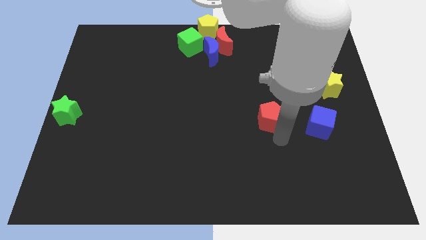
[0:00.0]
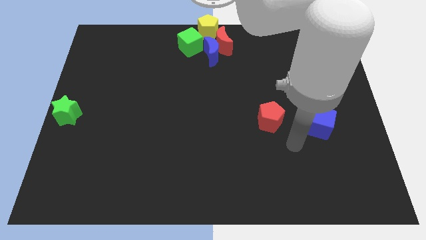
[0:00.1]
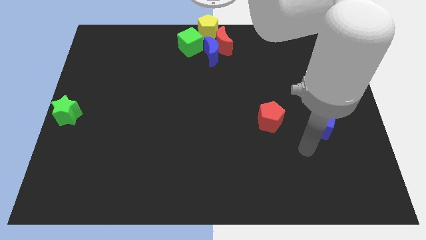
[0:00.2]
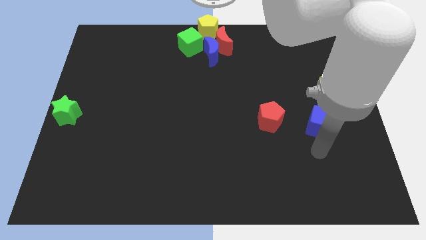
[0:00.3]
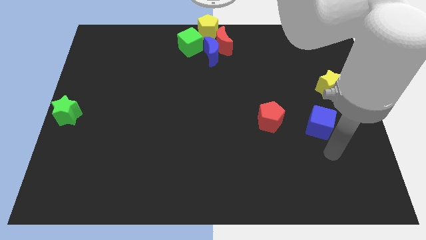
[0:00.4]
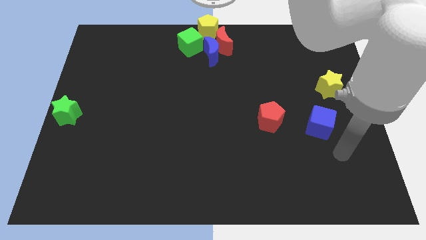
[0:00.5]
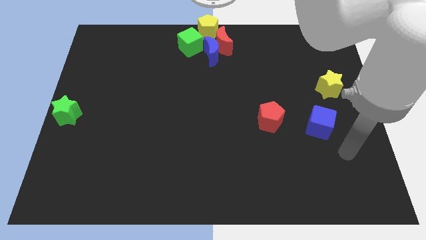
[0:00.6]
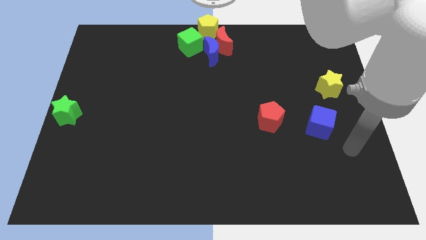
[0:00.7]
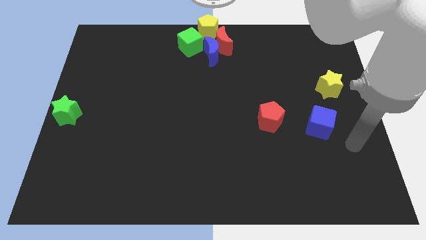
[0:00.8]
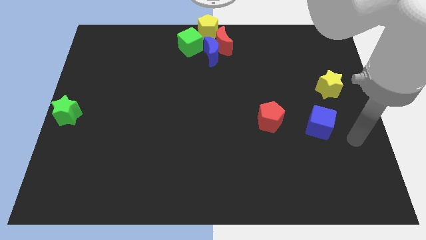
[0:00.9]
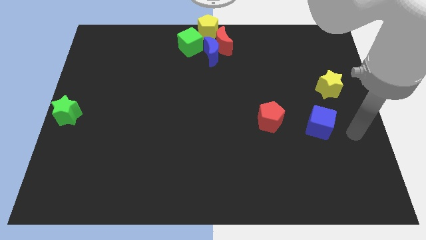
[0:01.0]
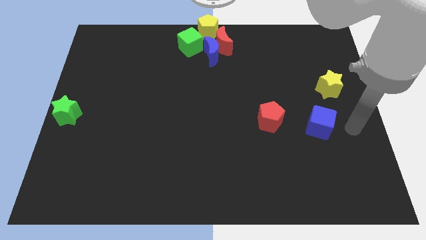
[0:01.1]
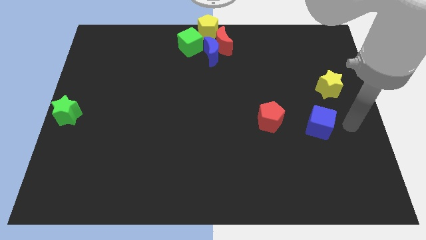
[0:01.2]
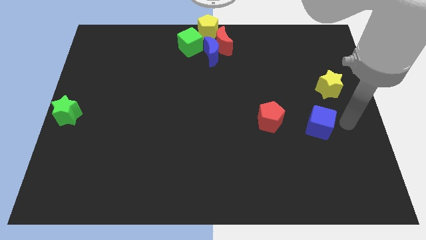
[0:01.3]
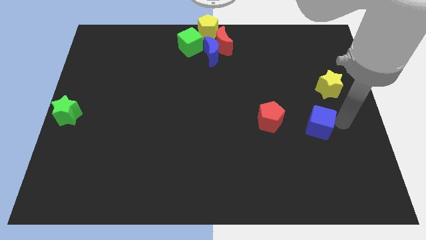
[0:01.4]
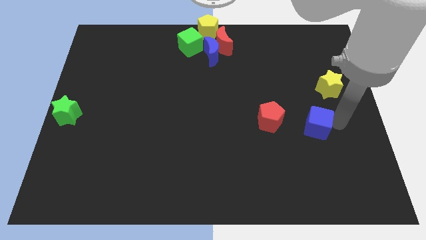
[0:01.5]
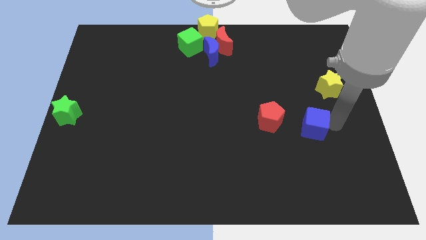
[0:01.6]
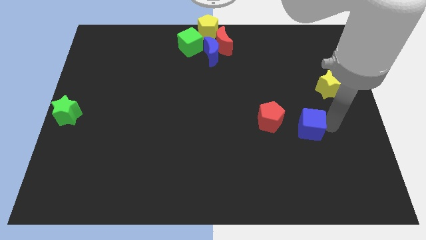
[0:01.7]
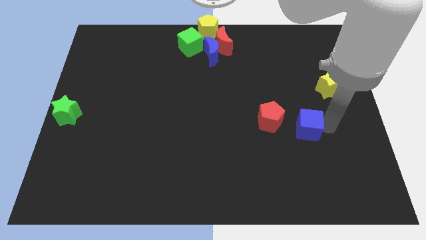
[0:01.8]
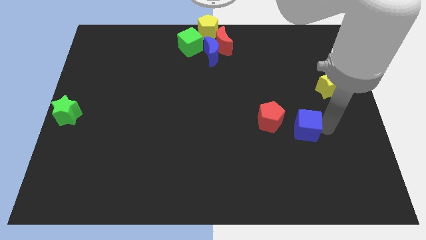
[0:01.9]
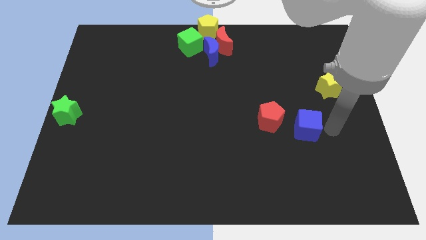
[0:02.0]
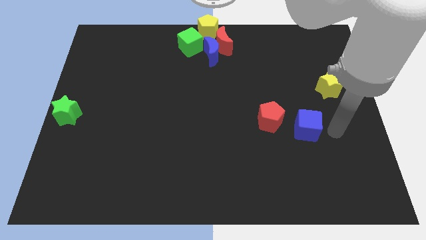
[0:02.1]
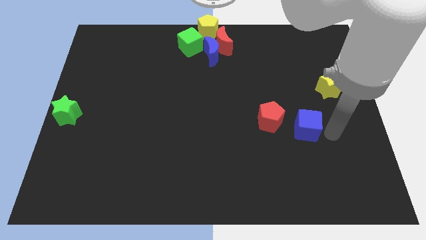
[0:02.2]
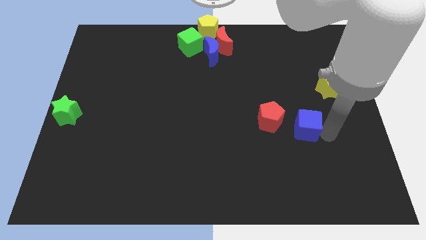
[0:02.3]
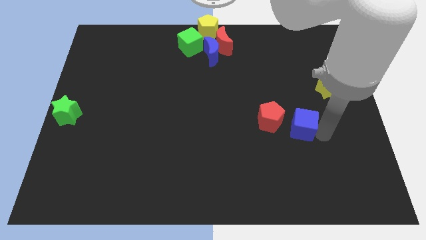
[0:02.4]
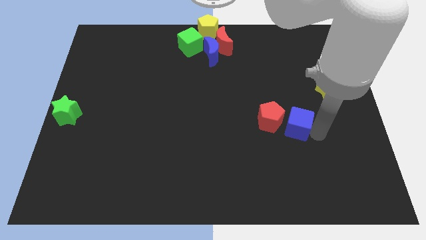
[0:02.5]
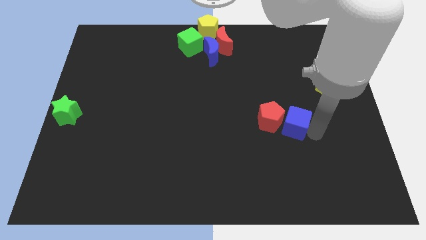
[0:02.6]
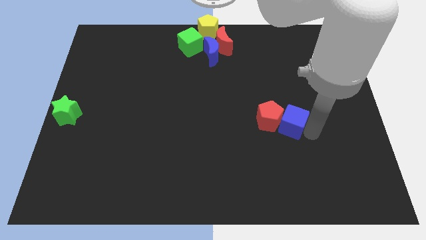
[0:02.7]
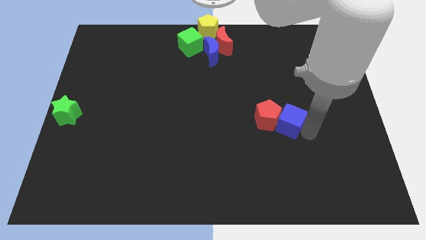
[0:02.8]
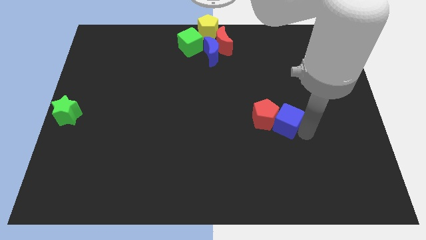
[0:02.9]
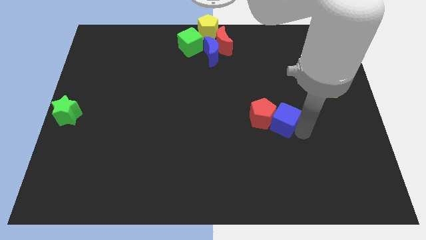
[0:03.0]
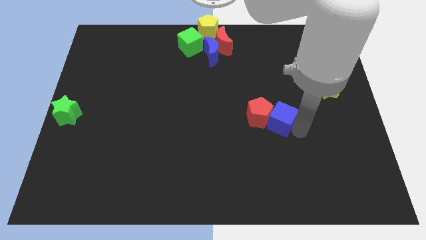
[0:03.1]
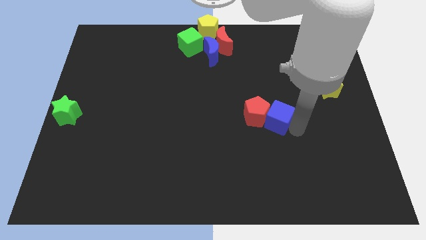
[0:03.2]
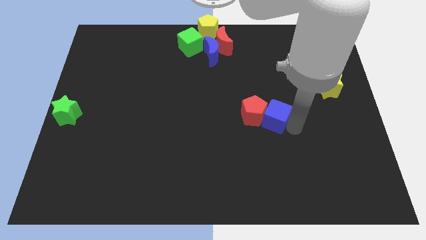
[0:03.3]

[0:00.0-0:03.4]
push the blue cube into the red pentagon

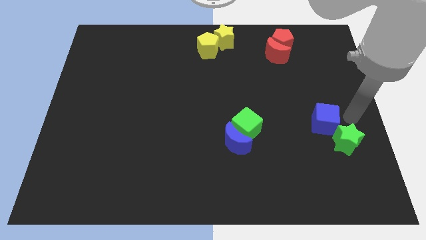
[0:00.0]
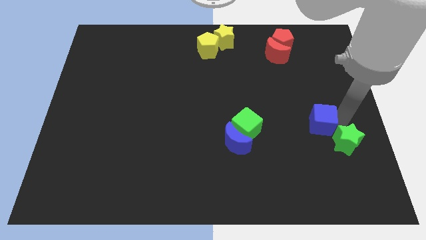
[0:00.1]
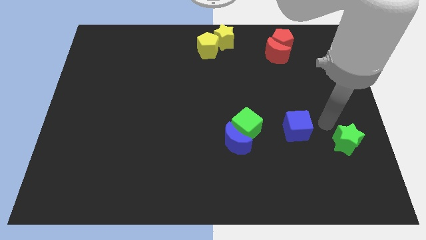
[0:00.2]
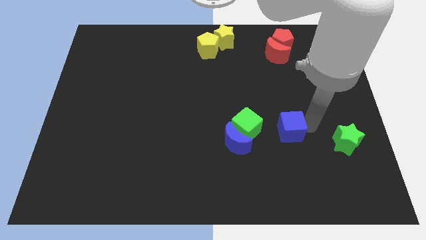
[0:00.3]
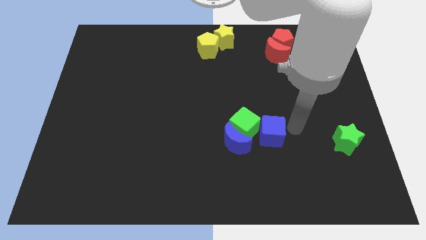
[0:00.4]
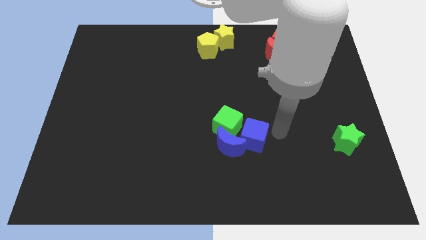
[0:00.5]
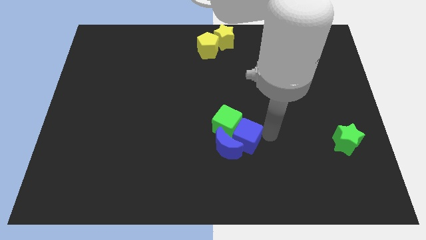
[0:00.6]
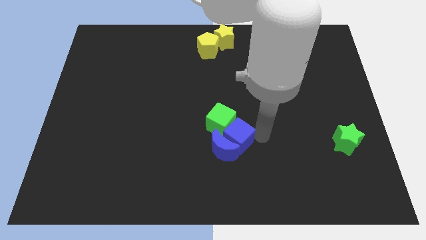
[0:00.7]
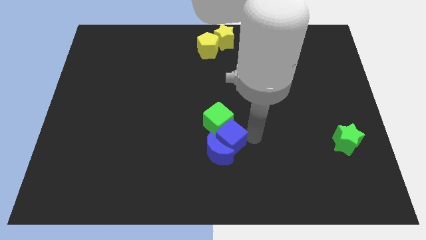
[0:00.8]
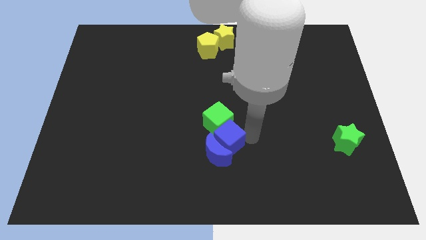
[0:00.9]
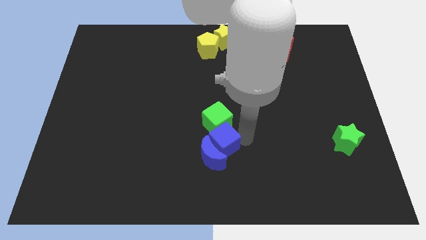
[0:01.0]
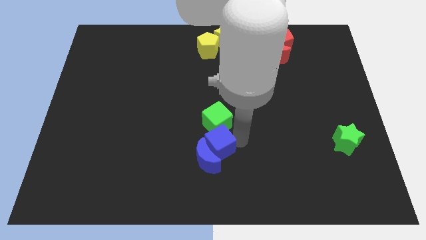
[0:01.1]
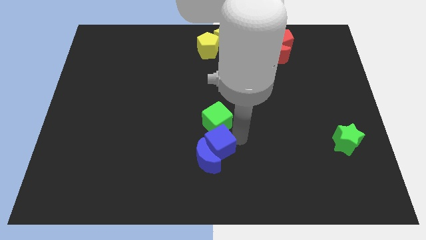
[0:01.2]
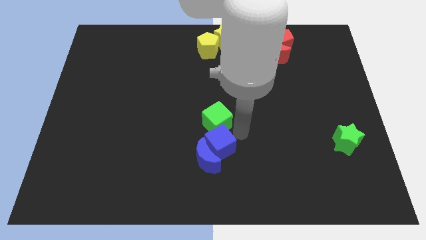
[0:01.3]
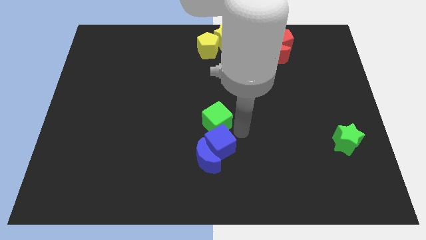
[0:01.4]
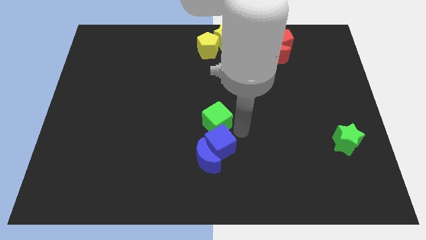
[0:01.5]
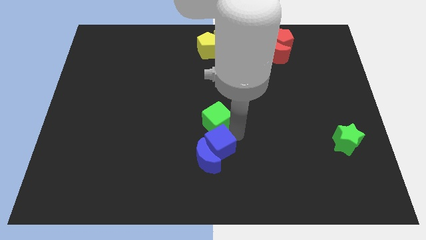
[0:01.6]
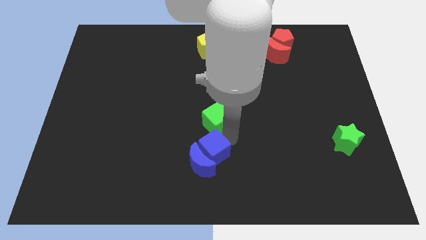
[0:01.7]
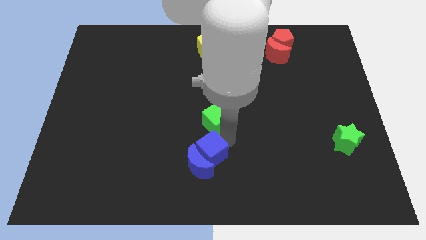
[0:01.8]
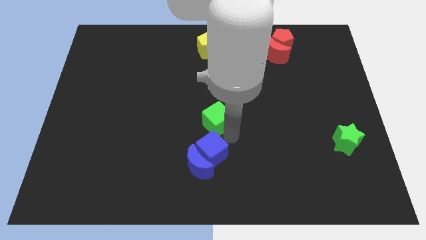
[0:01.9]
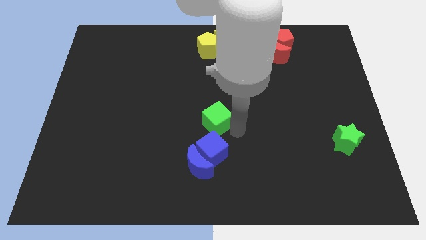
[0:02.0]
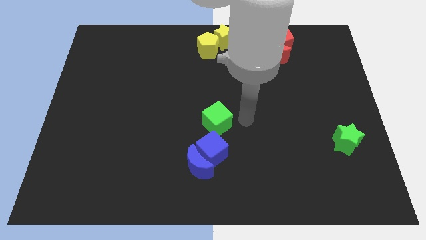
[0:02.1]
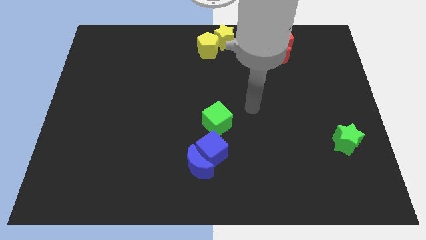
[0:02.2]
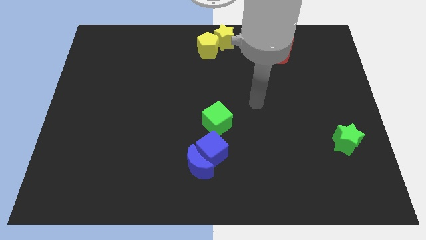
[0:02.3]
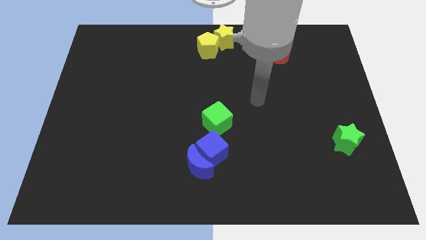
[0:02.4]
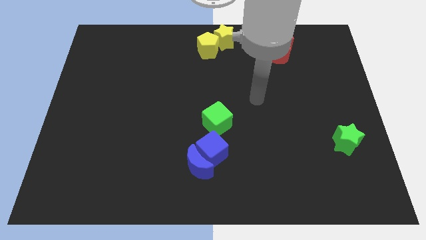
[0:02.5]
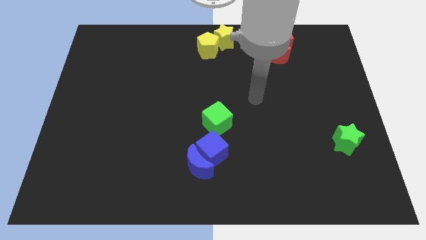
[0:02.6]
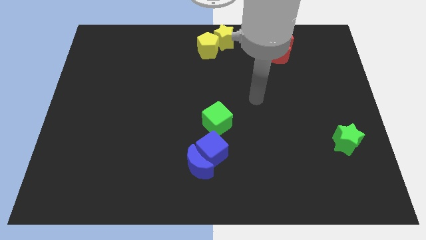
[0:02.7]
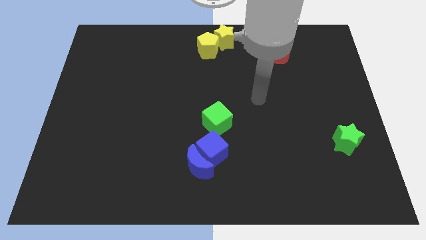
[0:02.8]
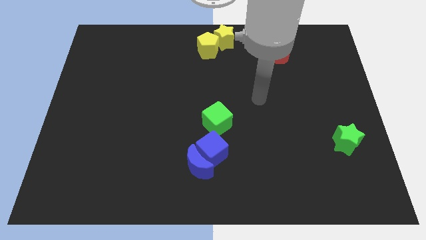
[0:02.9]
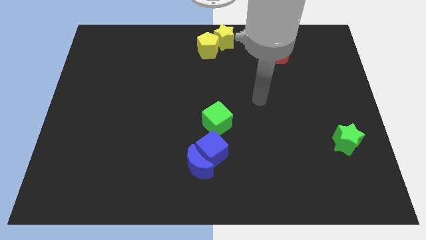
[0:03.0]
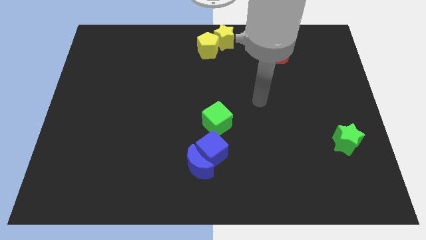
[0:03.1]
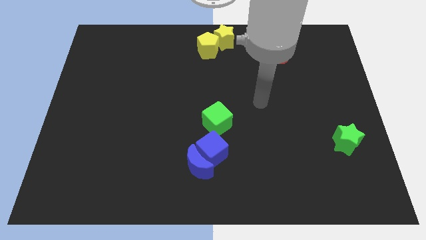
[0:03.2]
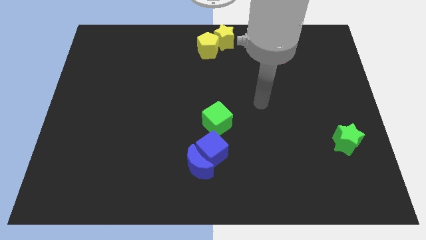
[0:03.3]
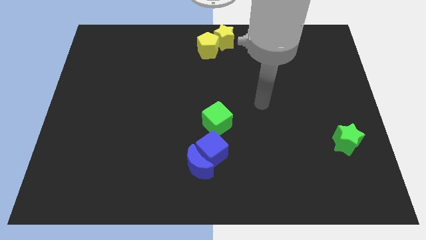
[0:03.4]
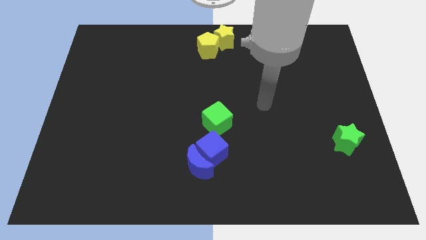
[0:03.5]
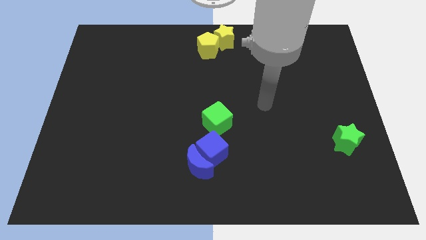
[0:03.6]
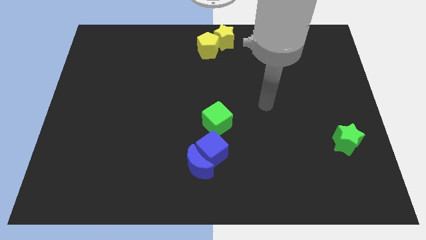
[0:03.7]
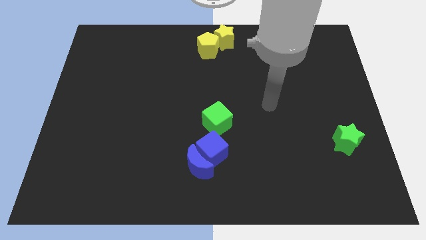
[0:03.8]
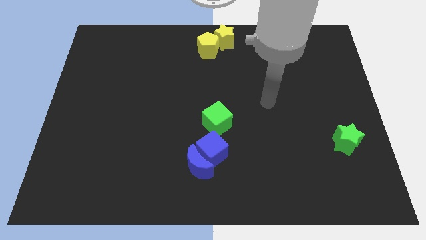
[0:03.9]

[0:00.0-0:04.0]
separate the blue crescent and green cube with the blue cube

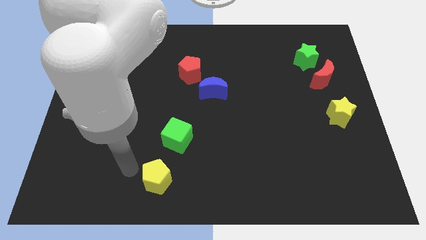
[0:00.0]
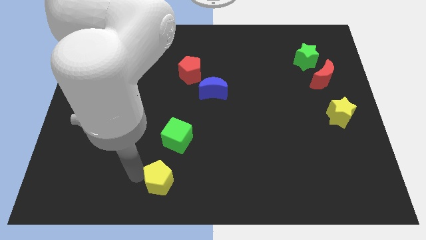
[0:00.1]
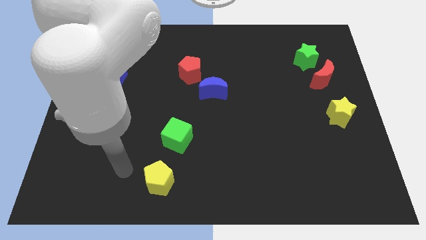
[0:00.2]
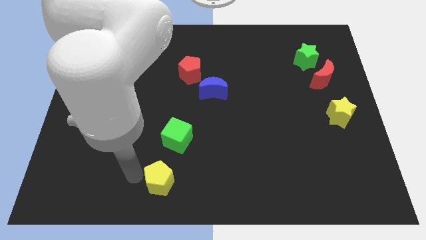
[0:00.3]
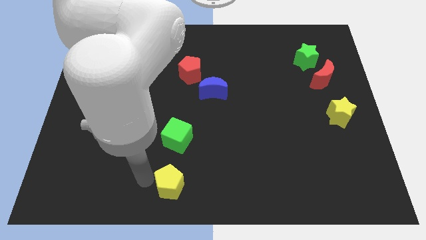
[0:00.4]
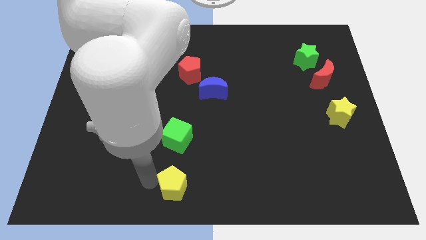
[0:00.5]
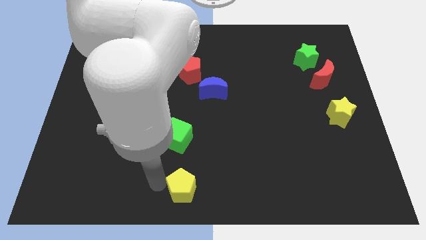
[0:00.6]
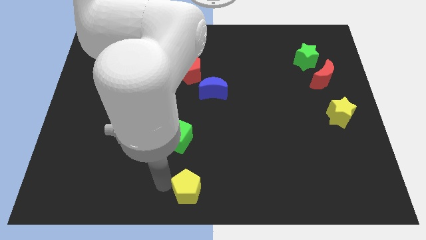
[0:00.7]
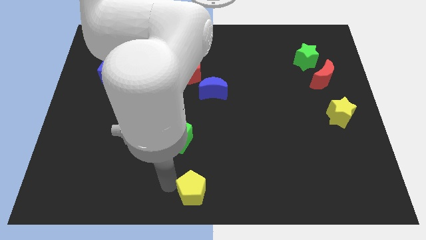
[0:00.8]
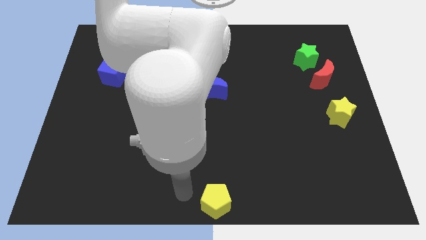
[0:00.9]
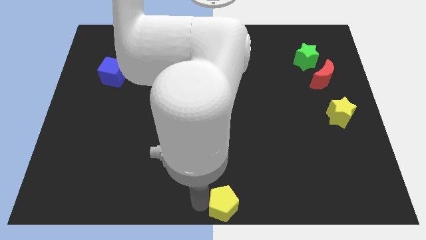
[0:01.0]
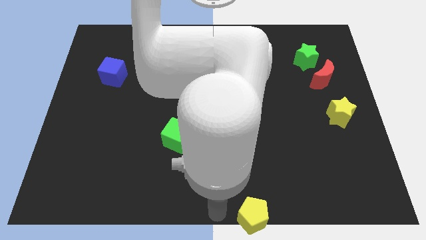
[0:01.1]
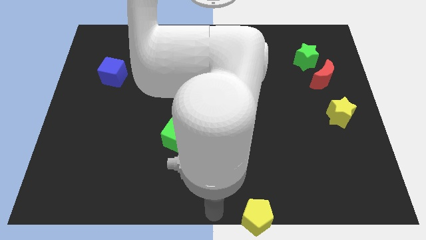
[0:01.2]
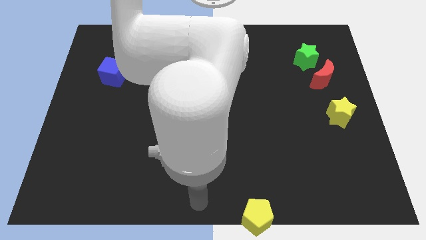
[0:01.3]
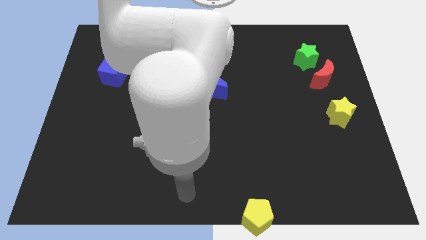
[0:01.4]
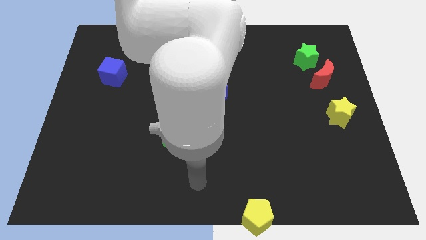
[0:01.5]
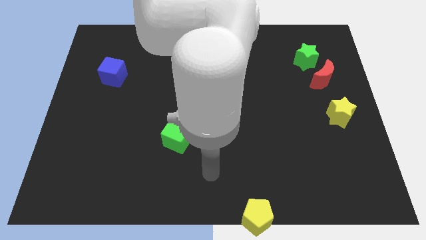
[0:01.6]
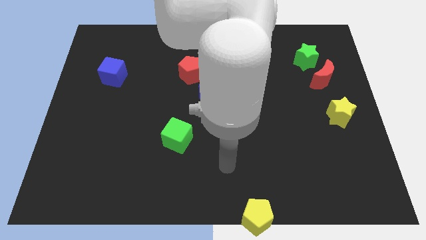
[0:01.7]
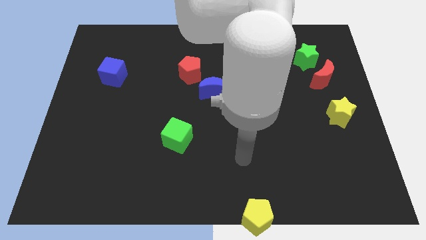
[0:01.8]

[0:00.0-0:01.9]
push yellow pentagon out of the board
